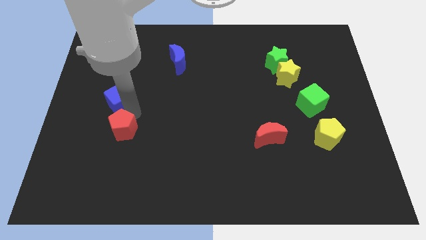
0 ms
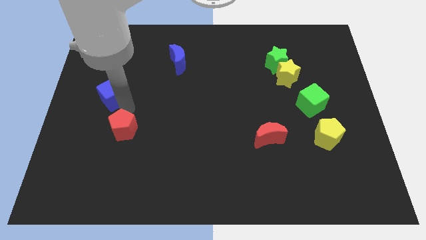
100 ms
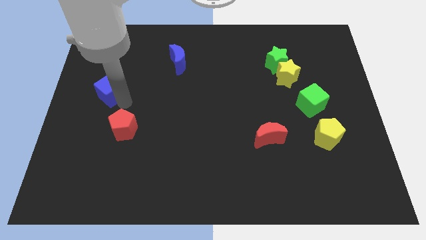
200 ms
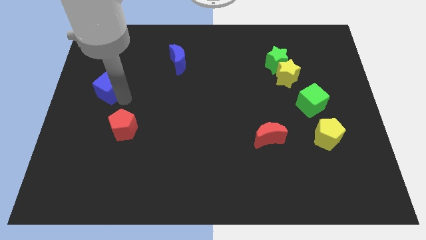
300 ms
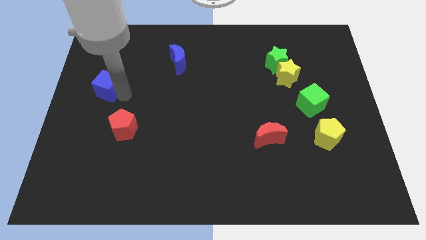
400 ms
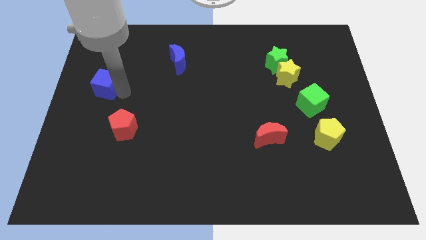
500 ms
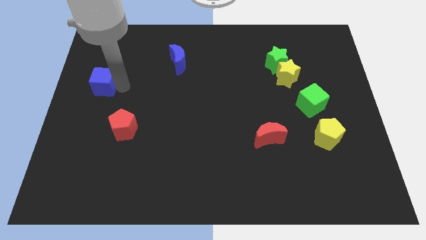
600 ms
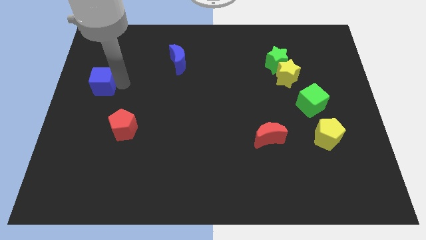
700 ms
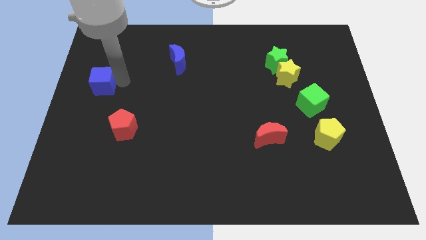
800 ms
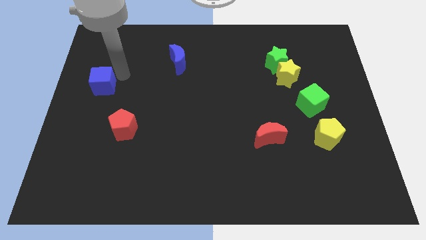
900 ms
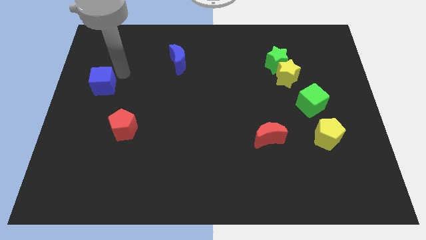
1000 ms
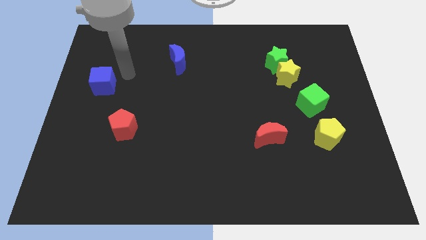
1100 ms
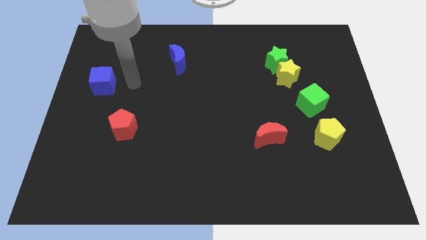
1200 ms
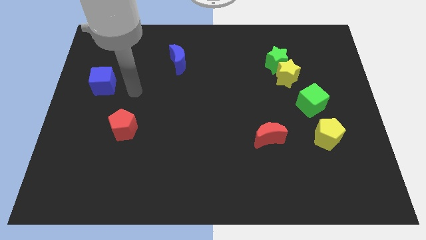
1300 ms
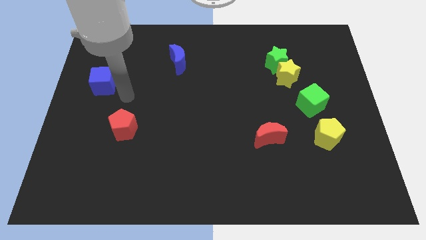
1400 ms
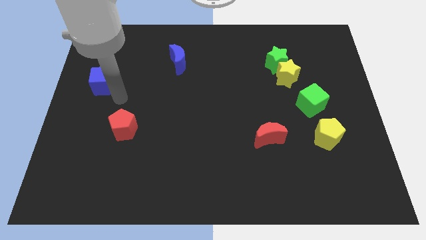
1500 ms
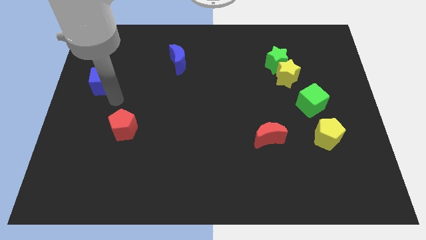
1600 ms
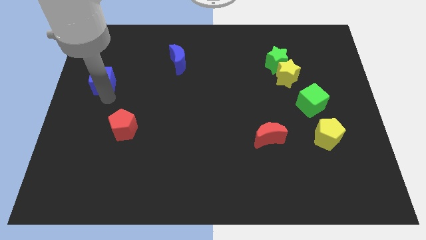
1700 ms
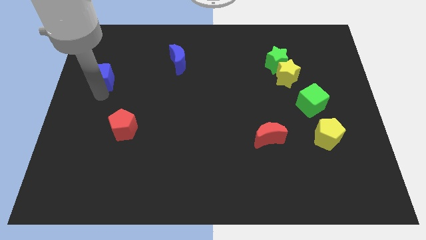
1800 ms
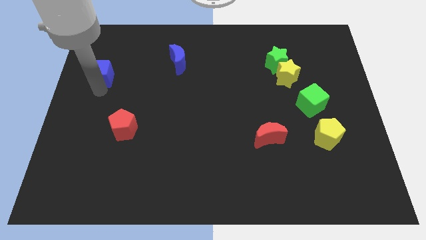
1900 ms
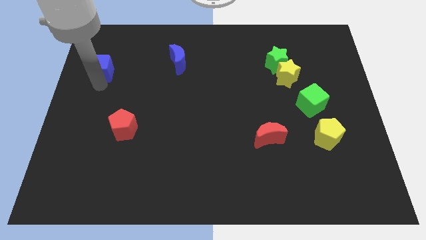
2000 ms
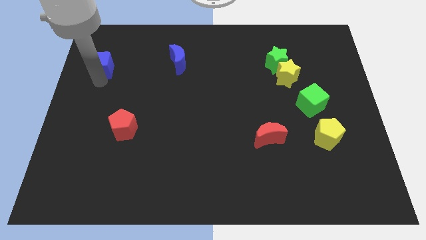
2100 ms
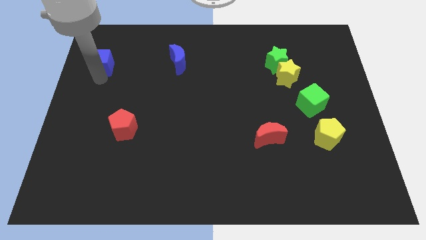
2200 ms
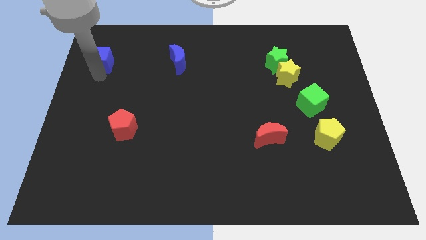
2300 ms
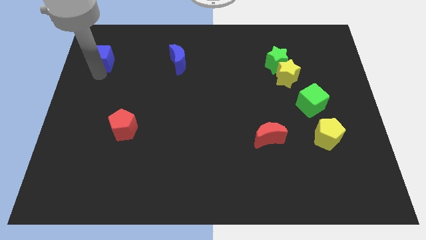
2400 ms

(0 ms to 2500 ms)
move the blue cube to the horizontal left of the blue moon

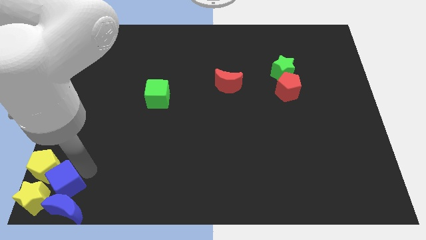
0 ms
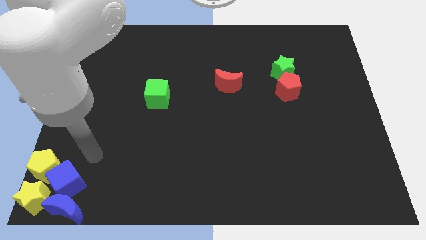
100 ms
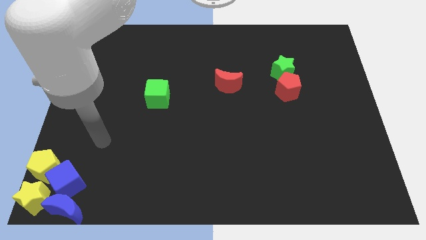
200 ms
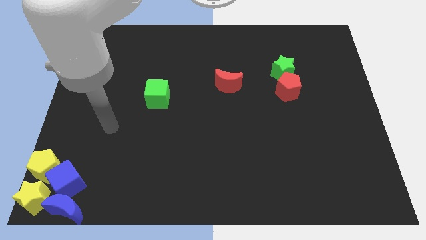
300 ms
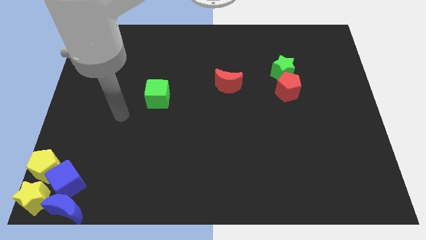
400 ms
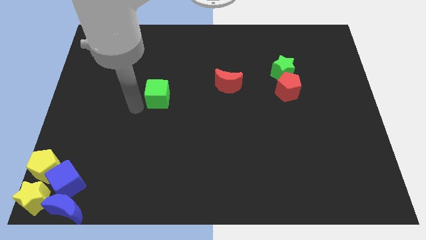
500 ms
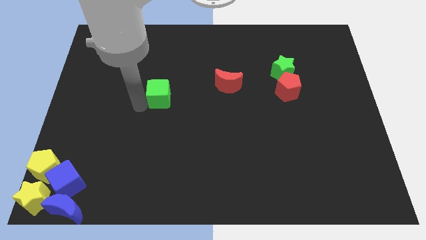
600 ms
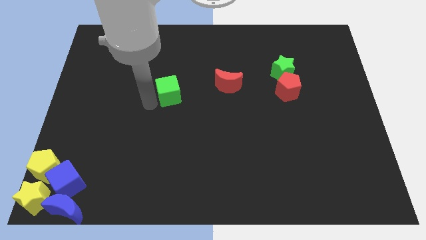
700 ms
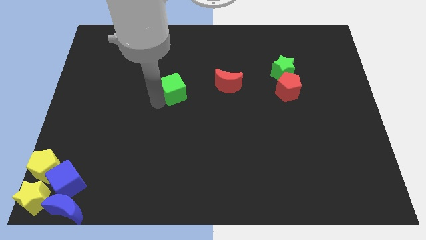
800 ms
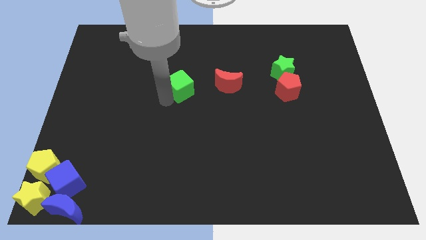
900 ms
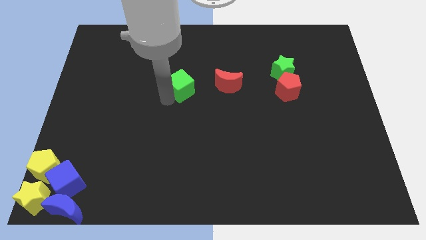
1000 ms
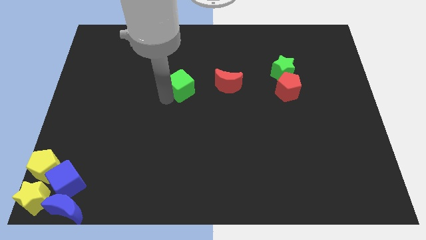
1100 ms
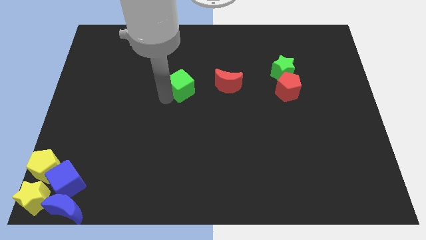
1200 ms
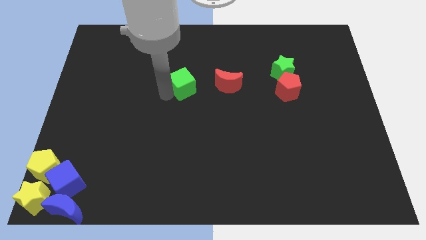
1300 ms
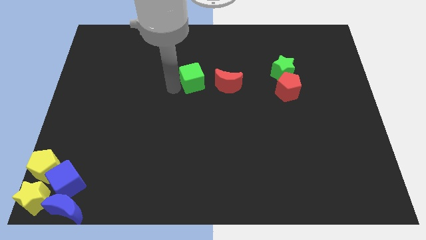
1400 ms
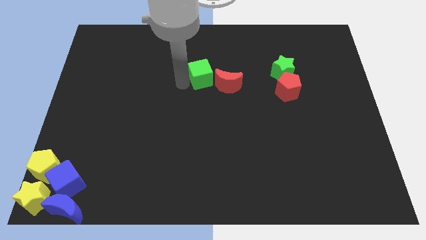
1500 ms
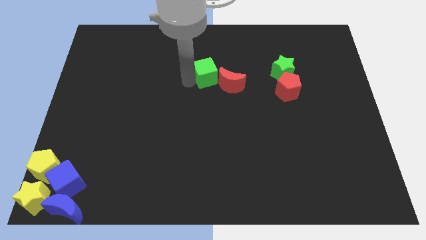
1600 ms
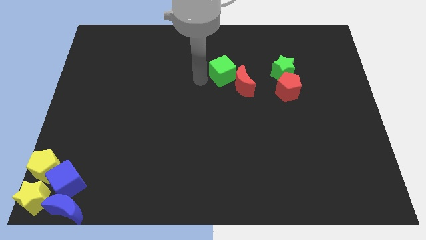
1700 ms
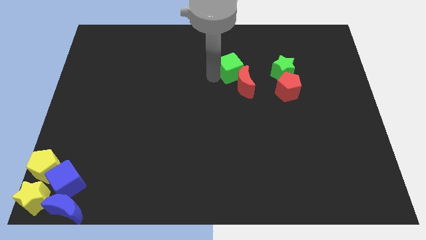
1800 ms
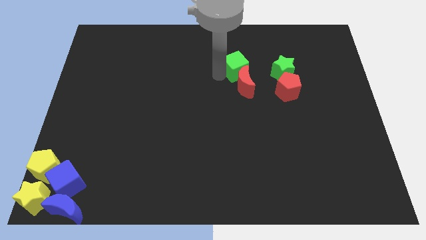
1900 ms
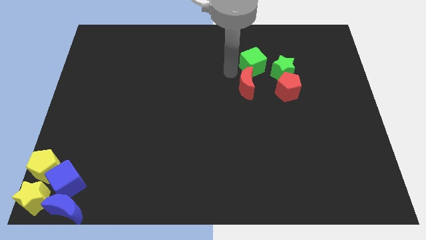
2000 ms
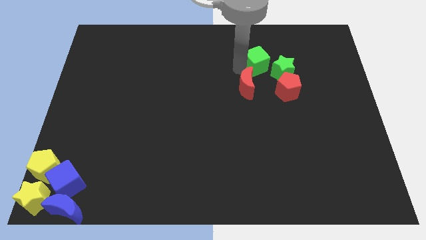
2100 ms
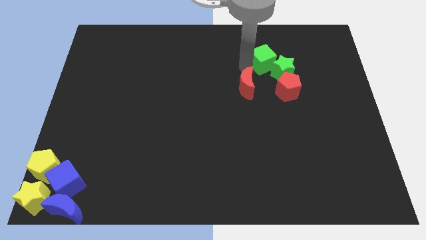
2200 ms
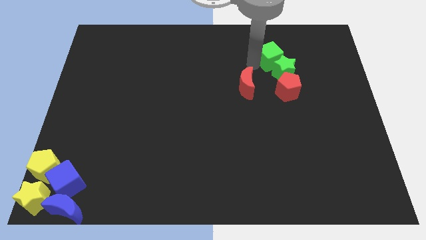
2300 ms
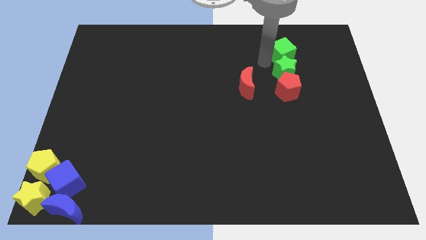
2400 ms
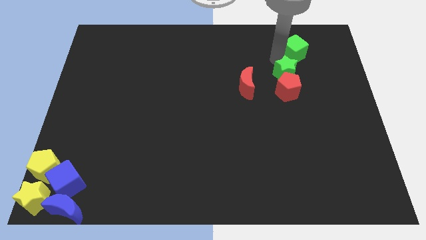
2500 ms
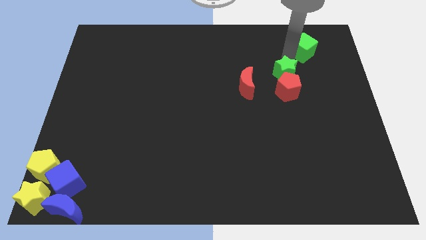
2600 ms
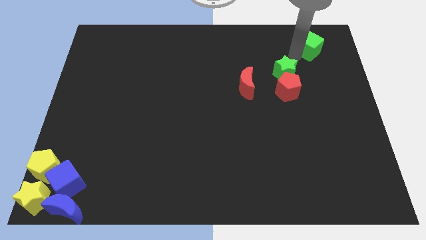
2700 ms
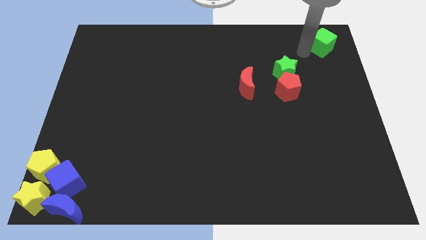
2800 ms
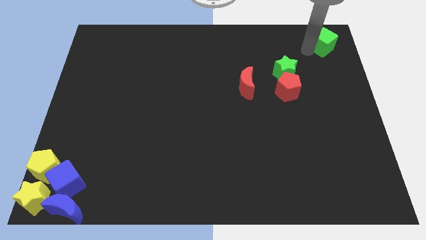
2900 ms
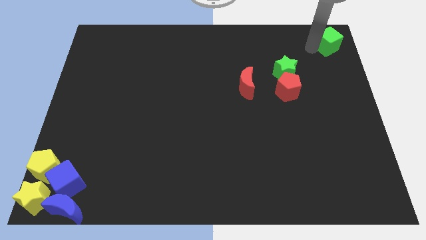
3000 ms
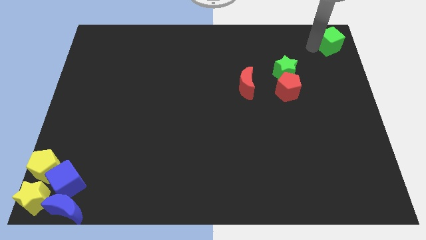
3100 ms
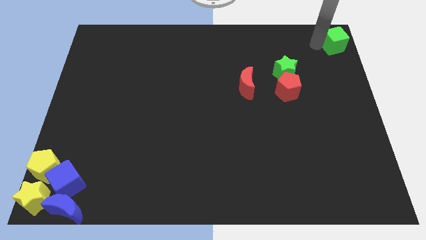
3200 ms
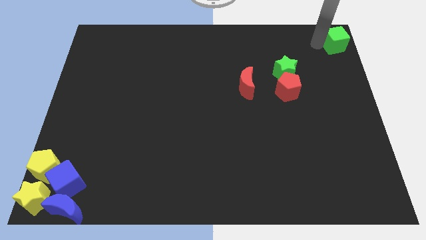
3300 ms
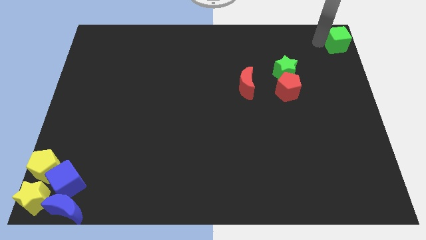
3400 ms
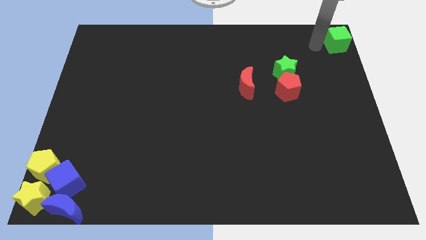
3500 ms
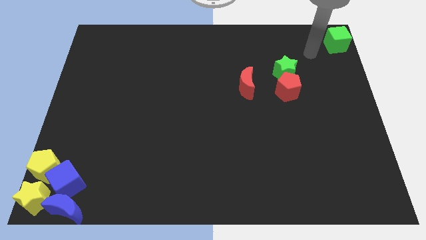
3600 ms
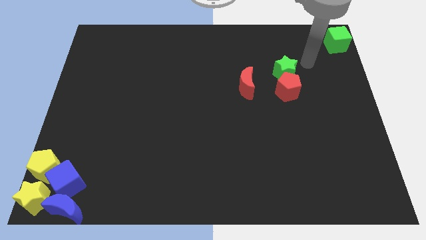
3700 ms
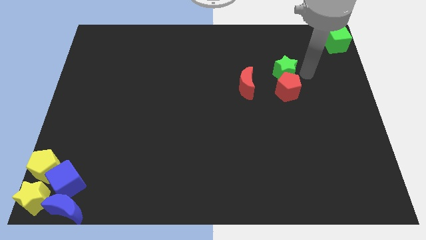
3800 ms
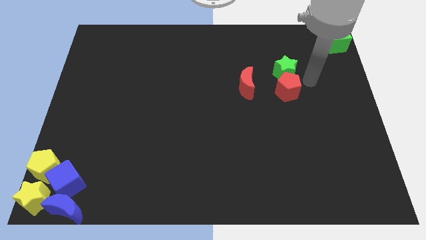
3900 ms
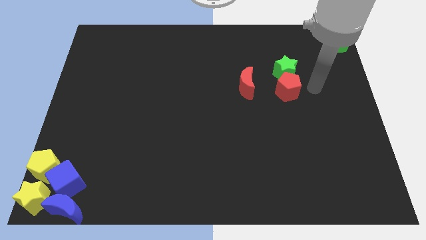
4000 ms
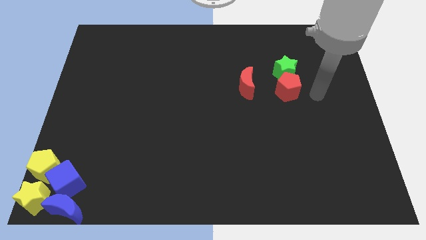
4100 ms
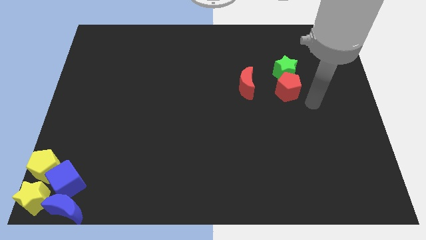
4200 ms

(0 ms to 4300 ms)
drag the green cube towards the top right corner

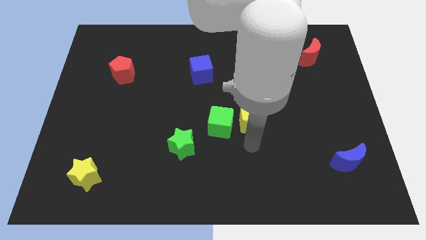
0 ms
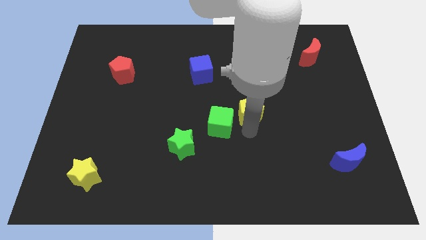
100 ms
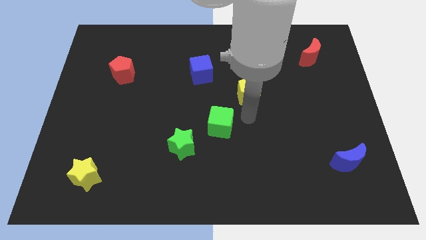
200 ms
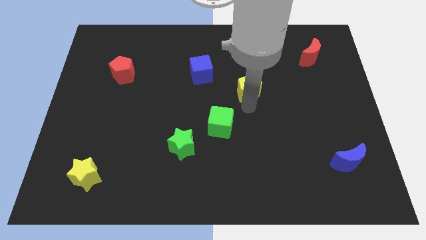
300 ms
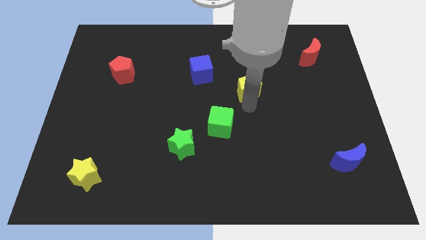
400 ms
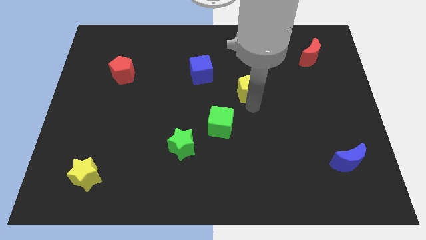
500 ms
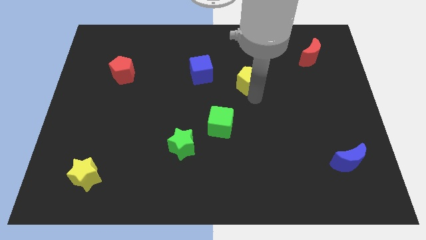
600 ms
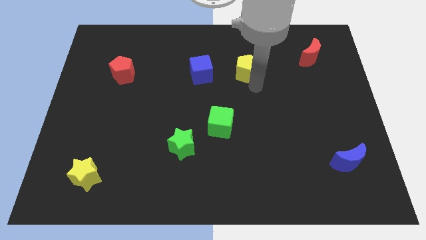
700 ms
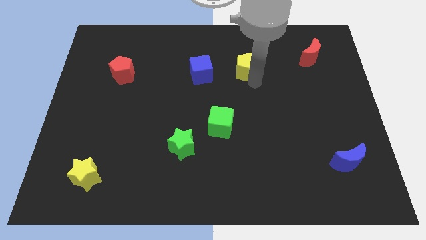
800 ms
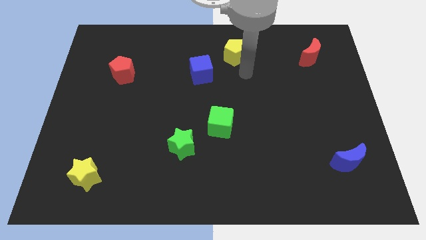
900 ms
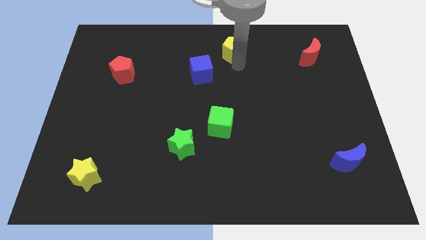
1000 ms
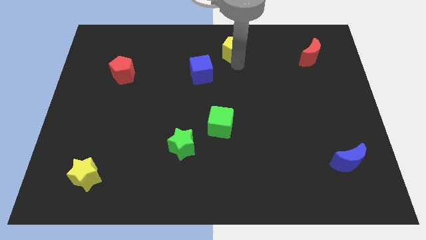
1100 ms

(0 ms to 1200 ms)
place yellow pentagon to the top right of the blue cube

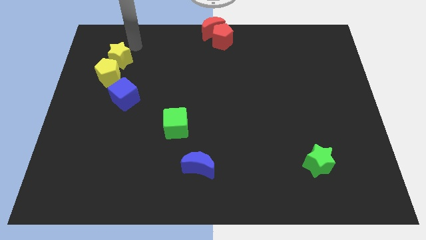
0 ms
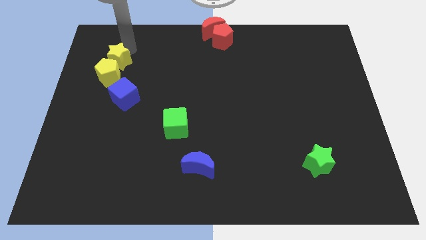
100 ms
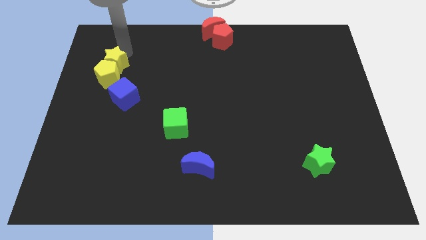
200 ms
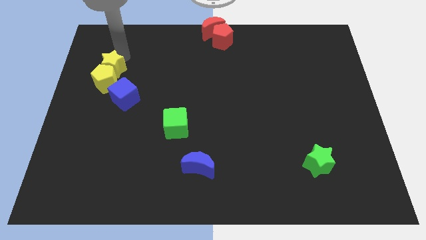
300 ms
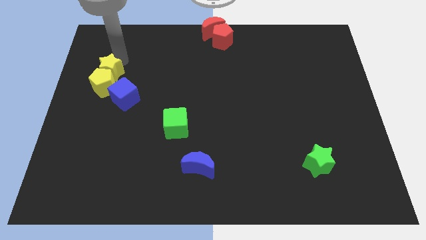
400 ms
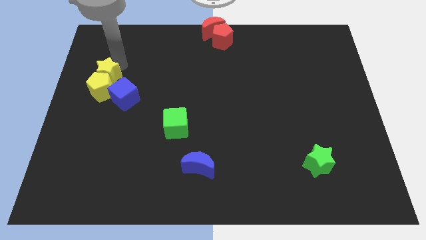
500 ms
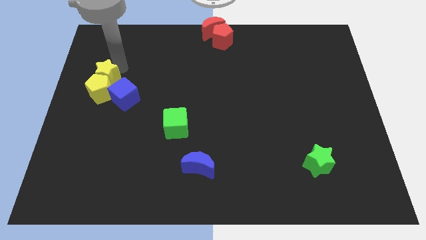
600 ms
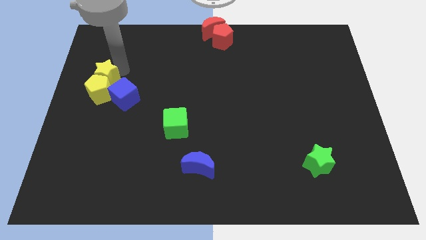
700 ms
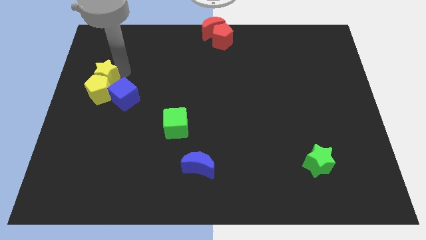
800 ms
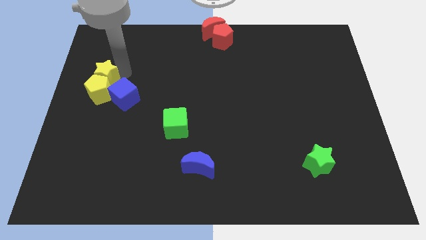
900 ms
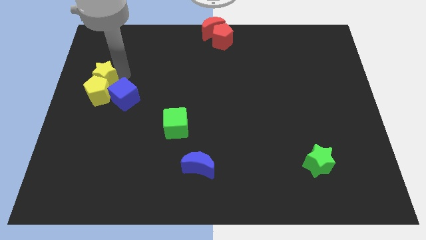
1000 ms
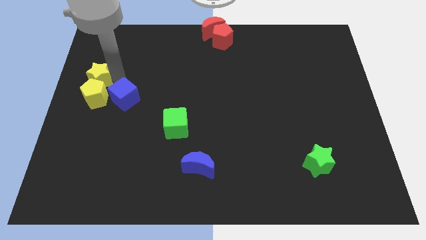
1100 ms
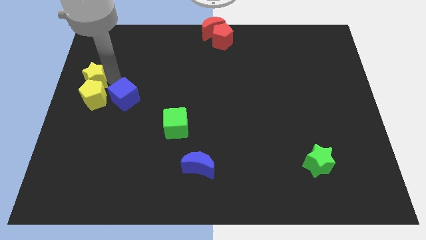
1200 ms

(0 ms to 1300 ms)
move yellow pentagon with yellow star
